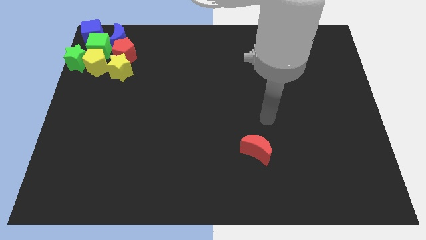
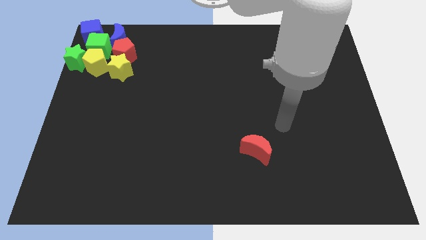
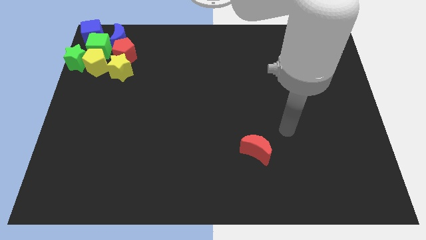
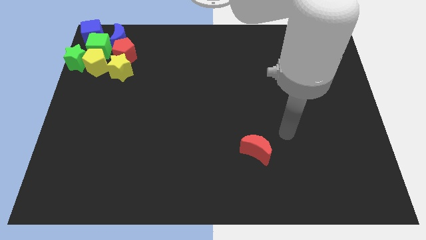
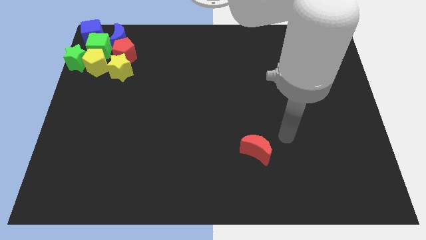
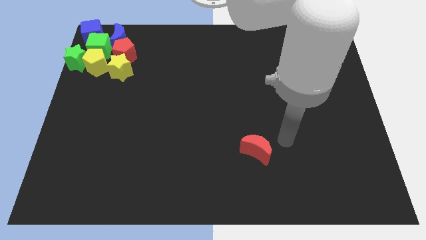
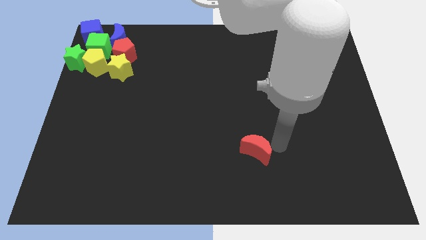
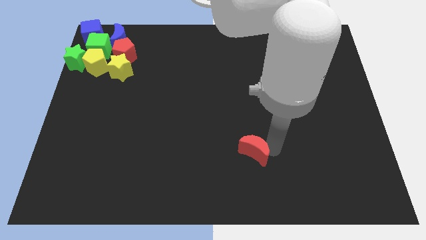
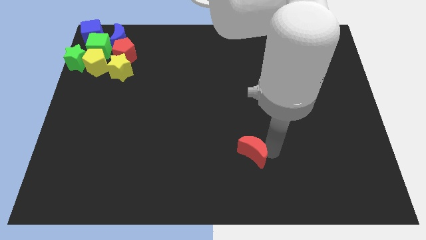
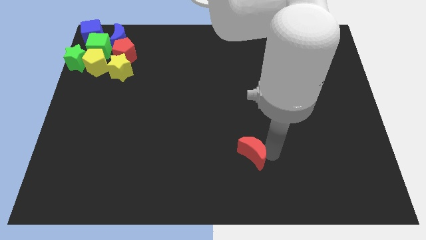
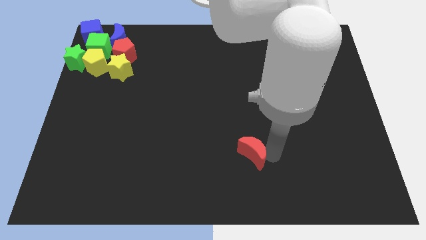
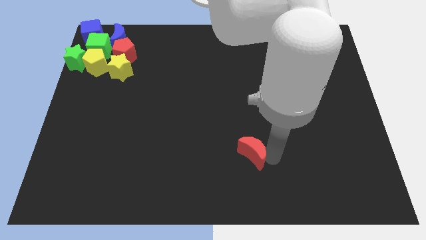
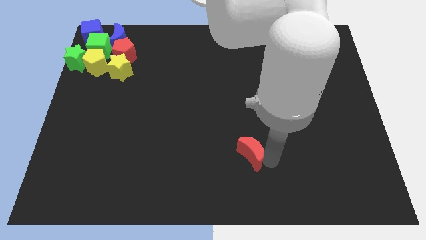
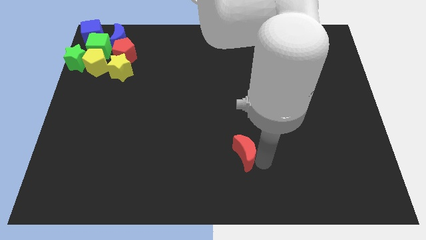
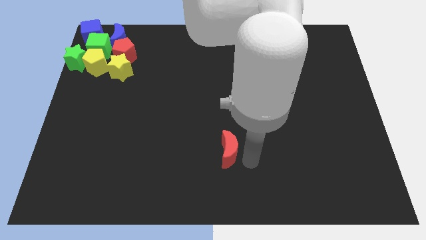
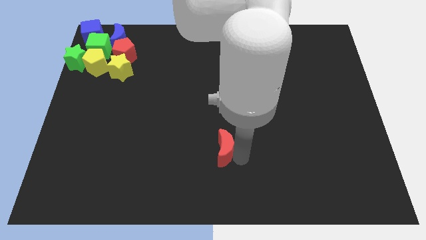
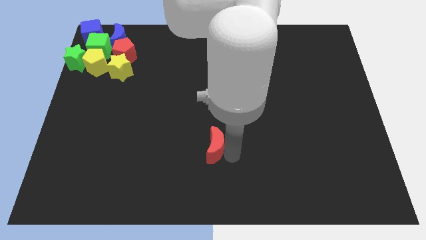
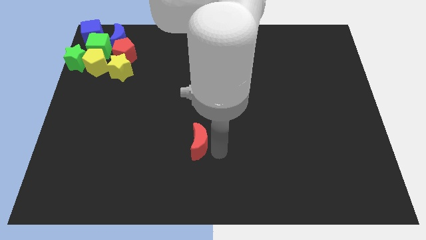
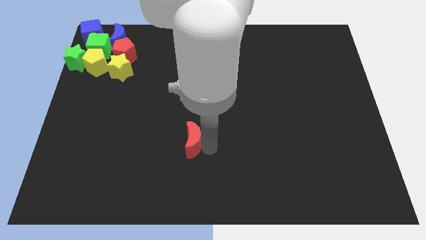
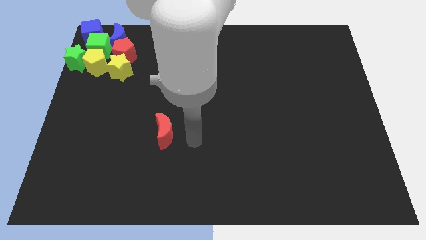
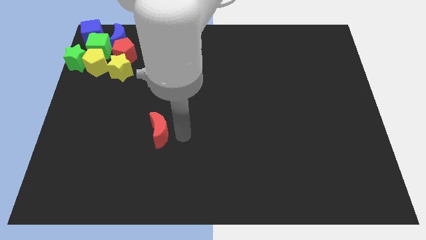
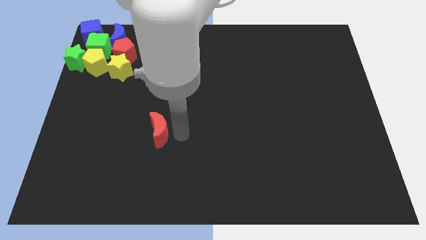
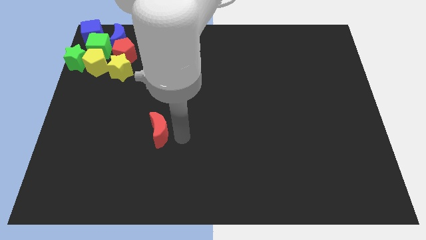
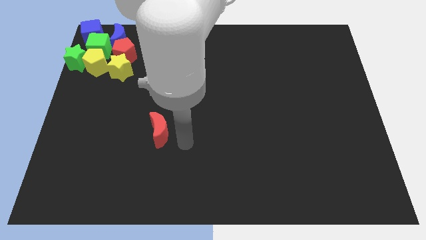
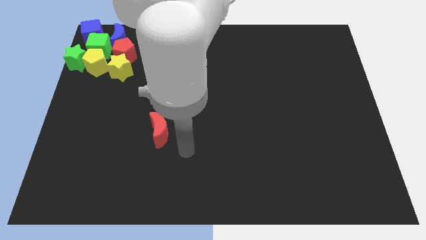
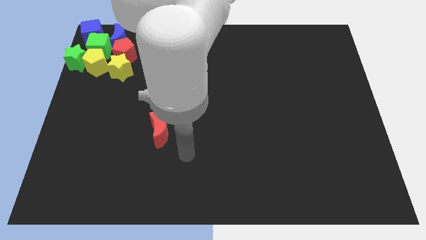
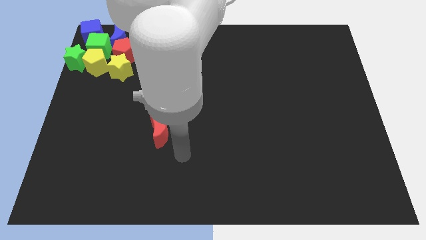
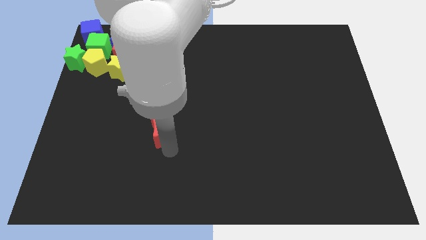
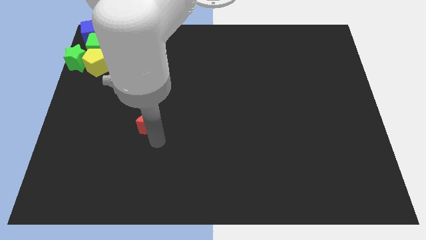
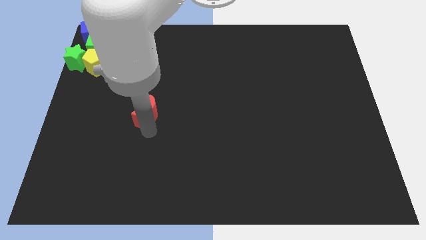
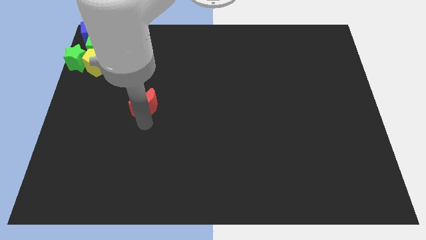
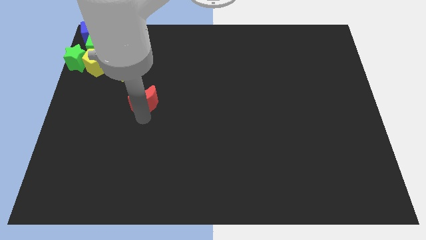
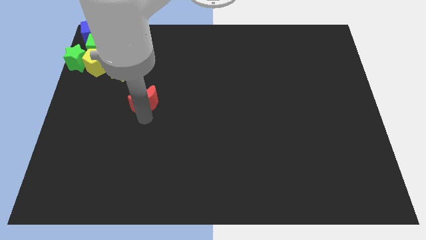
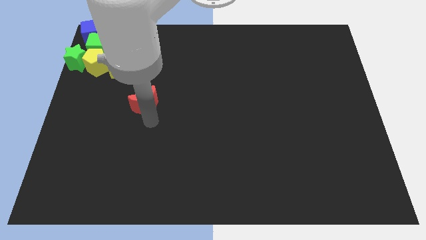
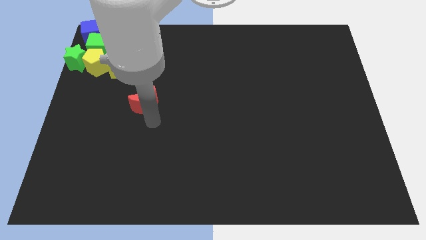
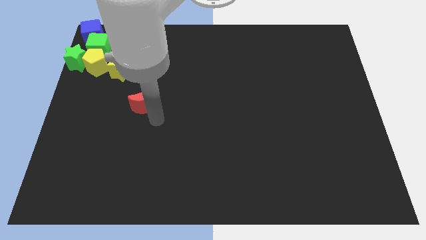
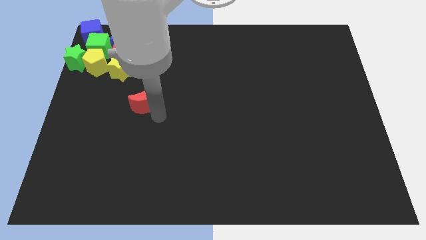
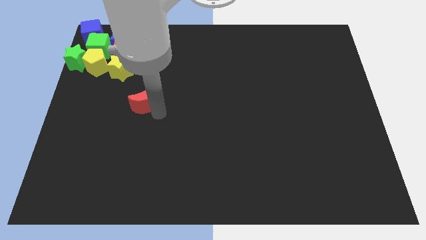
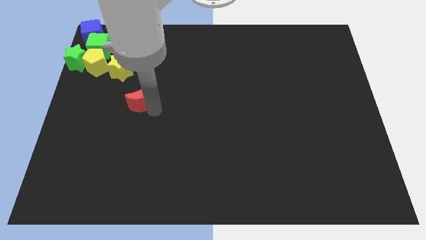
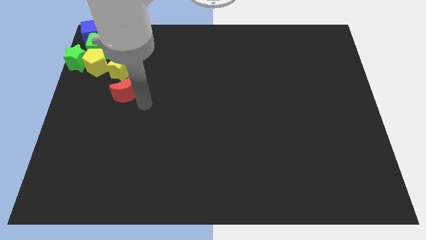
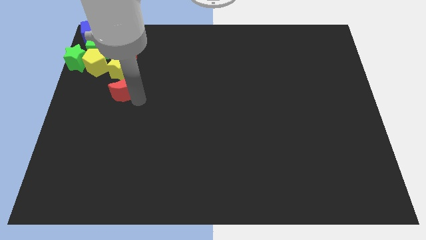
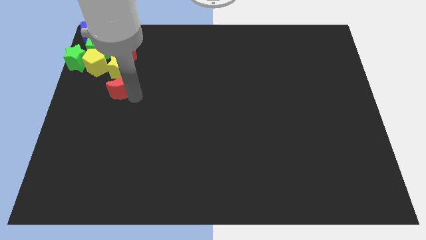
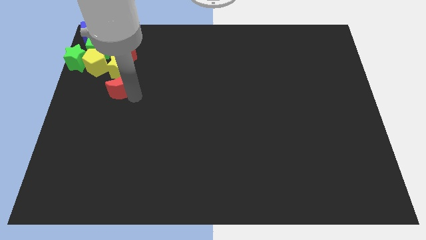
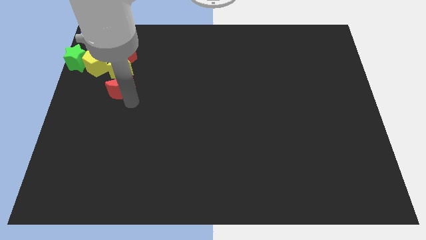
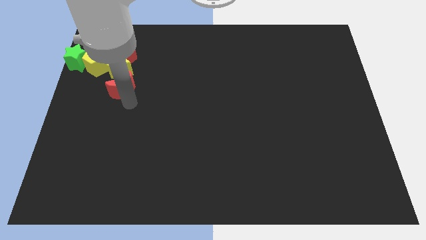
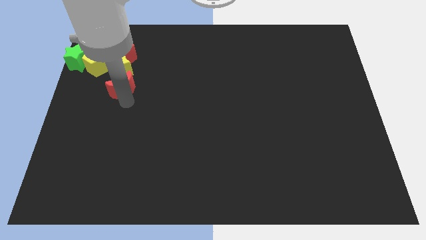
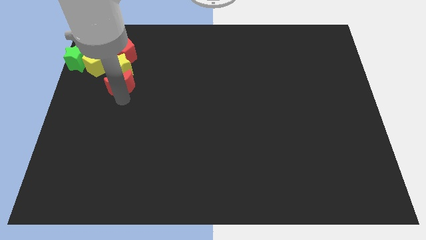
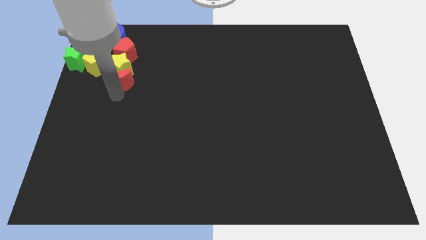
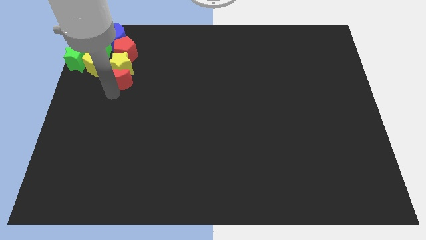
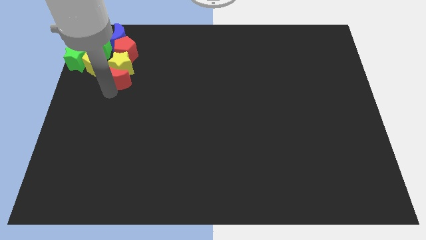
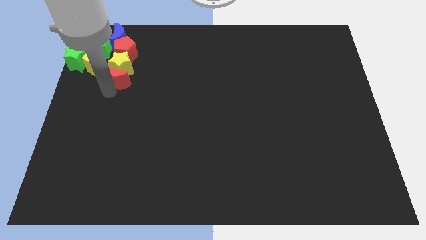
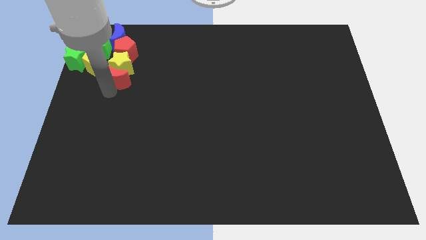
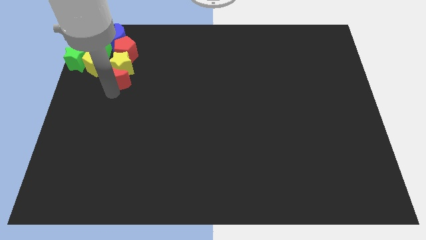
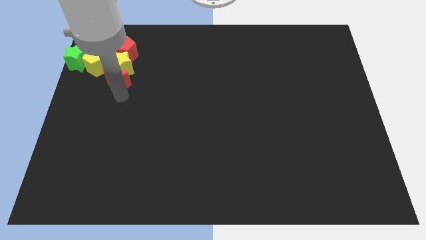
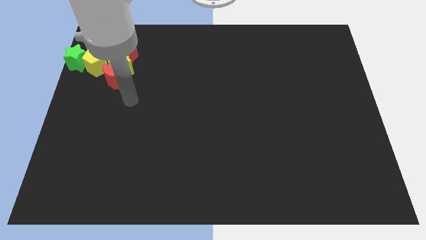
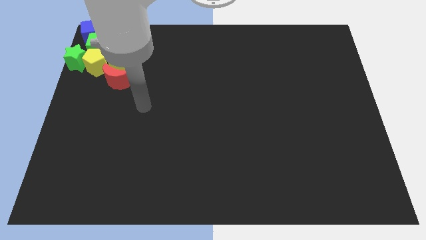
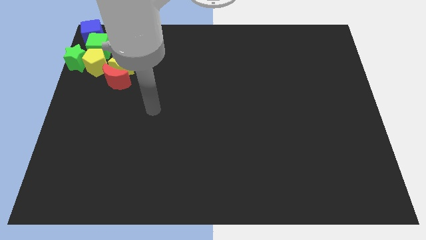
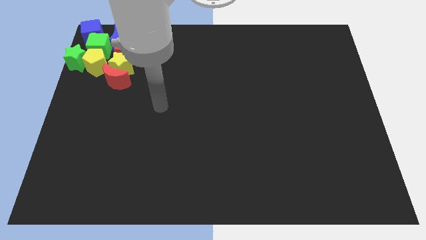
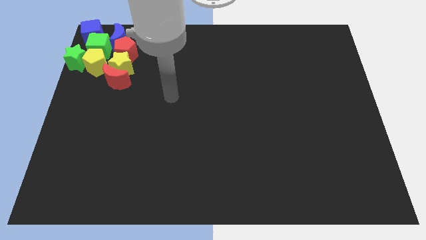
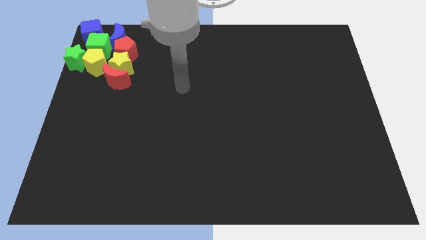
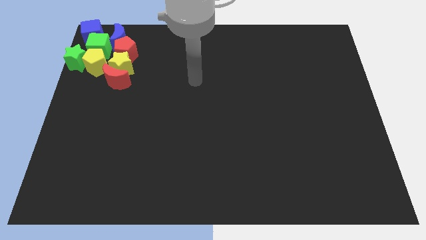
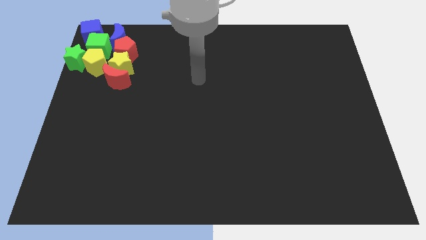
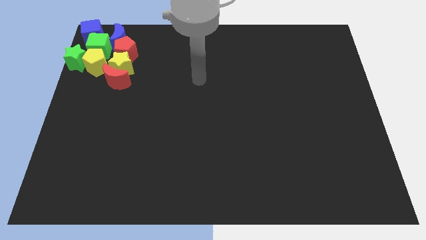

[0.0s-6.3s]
make the all blocks touch

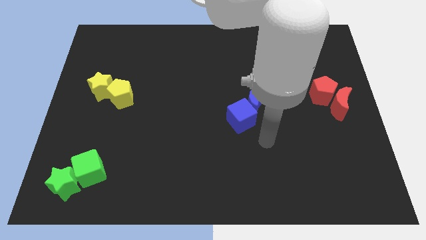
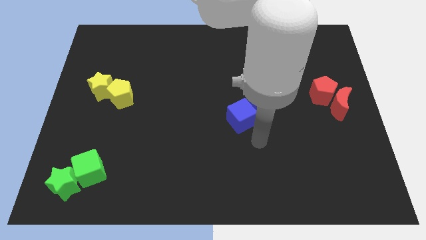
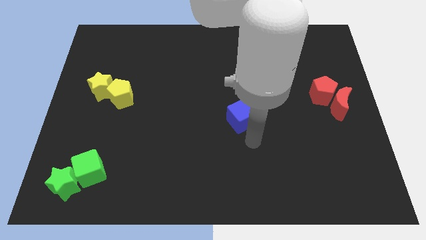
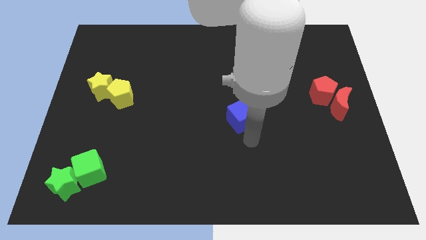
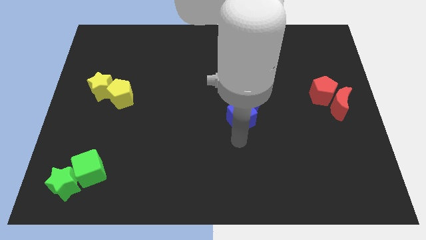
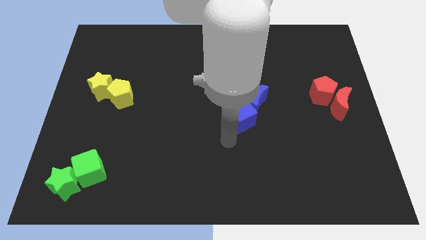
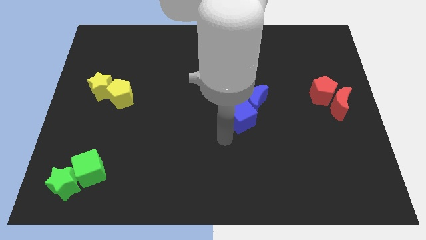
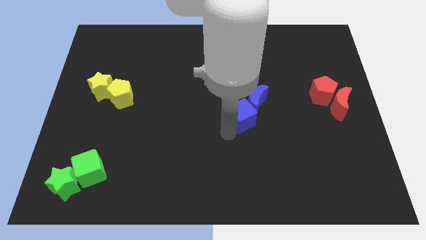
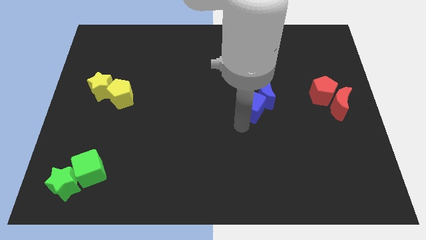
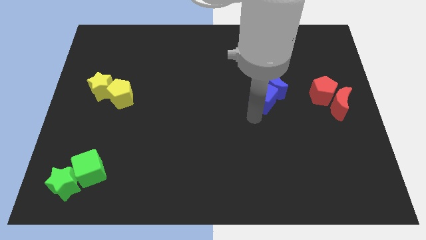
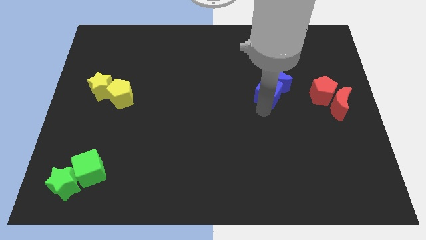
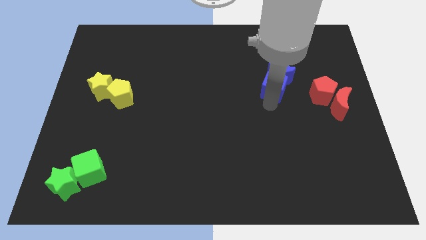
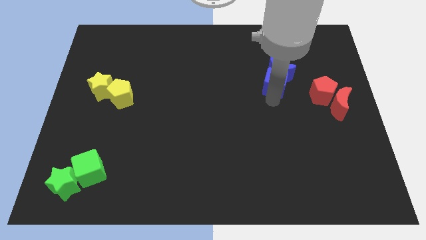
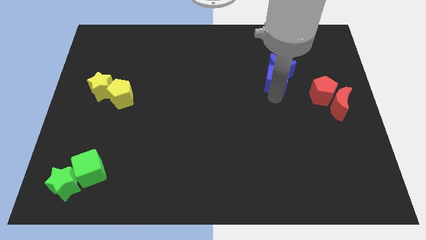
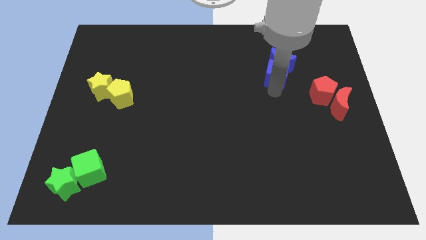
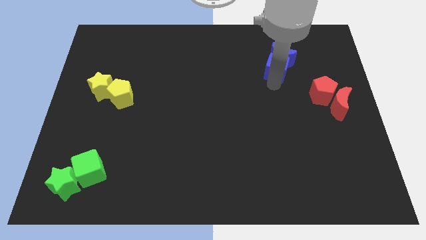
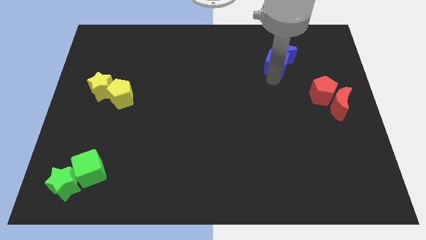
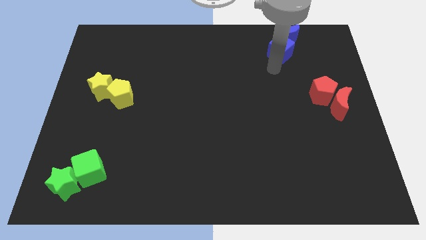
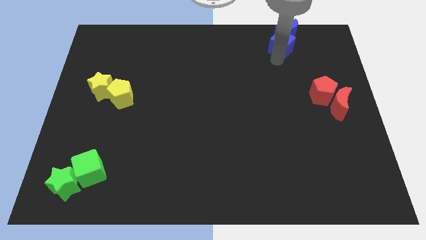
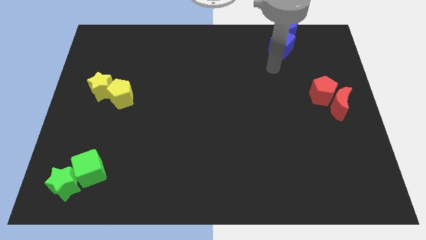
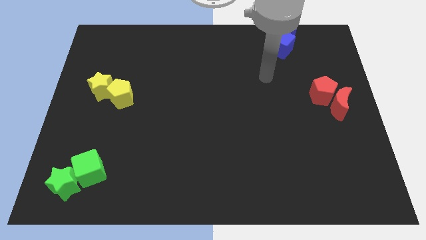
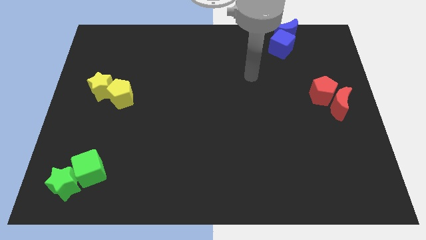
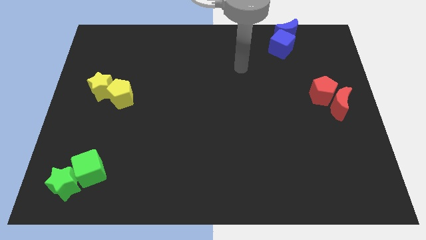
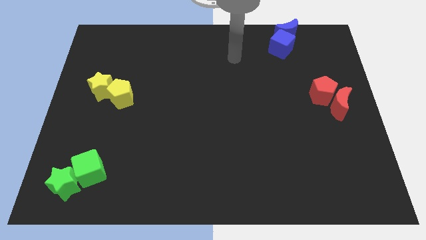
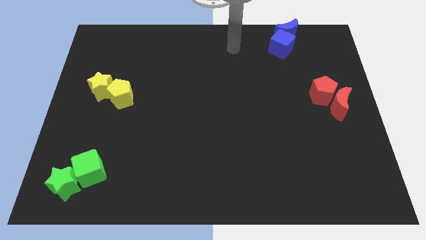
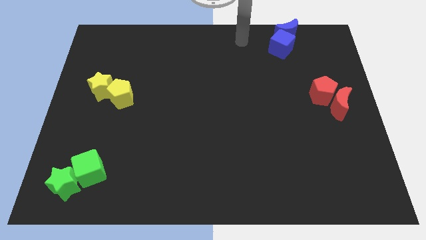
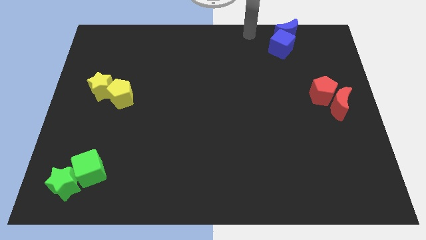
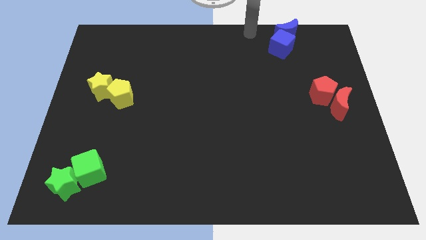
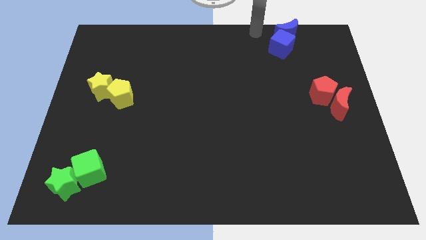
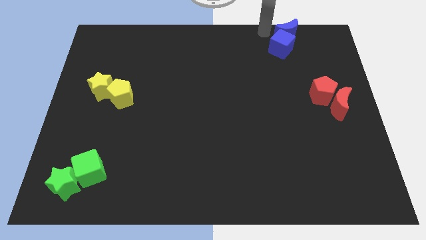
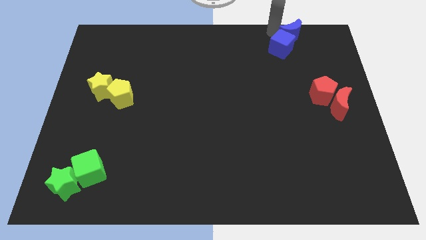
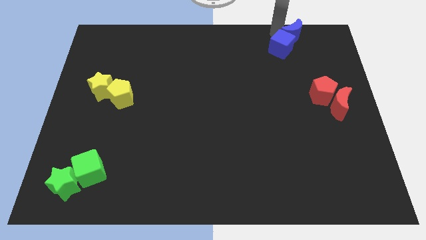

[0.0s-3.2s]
move the blue cube and blue crescent to the top of the board
